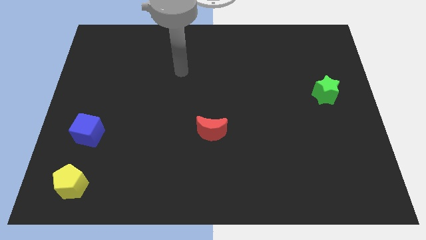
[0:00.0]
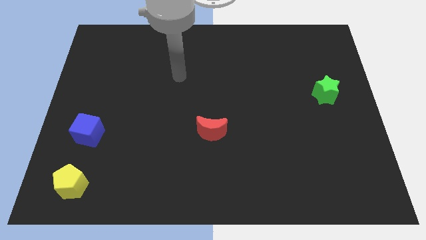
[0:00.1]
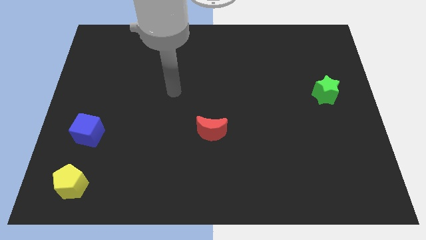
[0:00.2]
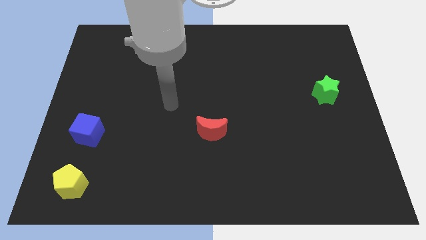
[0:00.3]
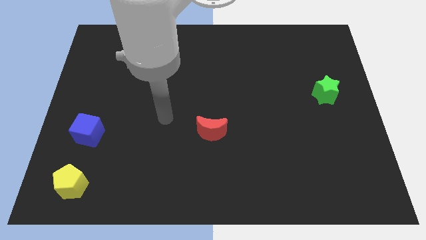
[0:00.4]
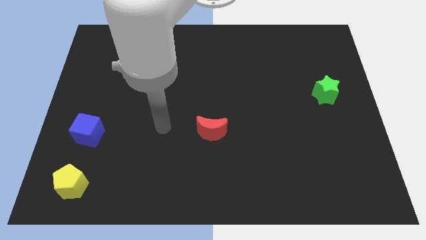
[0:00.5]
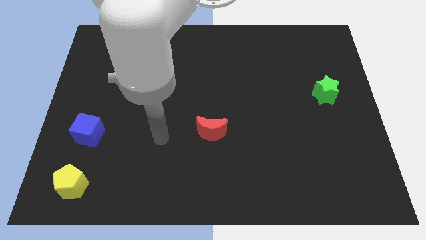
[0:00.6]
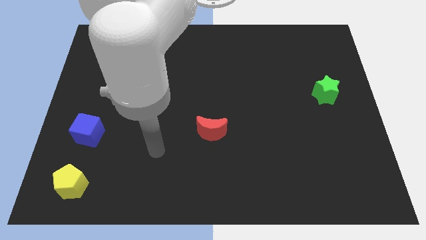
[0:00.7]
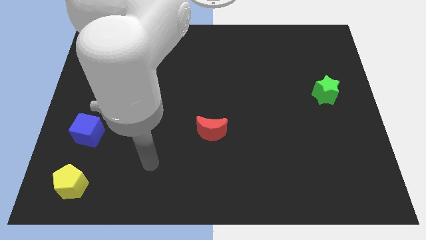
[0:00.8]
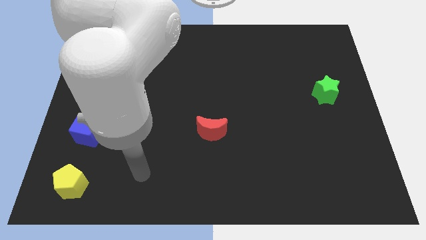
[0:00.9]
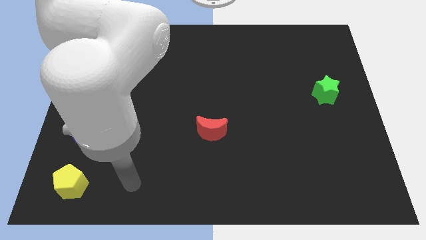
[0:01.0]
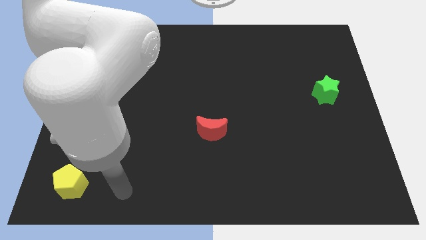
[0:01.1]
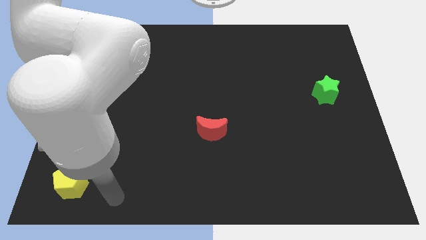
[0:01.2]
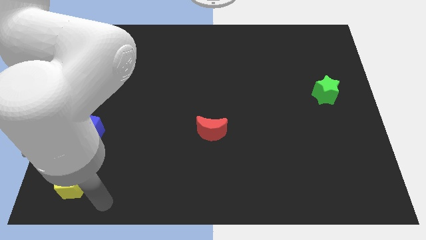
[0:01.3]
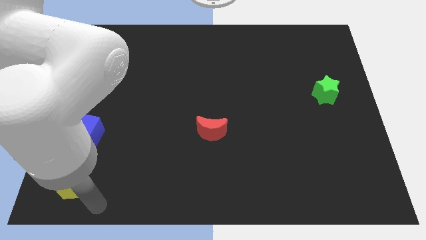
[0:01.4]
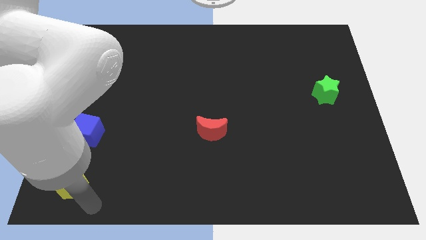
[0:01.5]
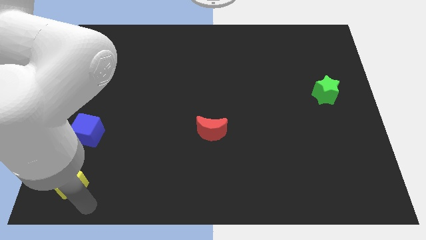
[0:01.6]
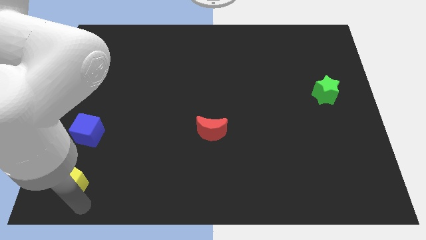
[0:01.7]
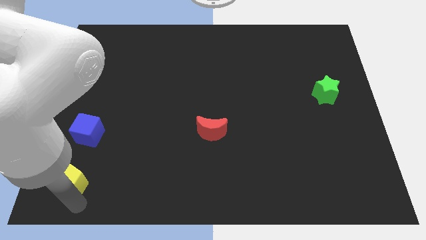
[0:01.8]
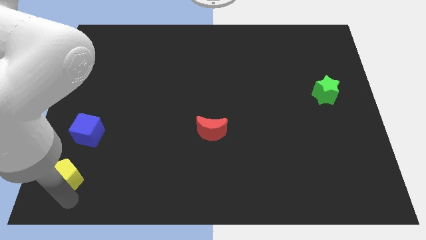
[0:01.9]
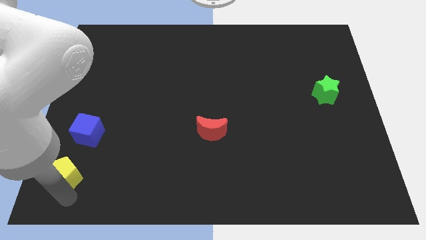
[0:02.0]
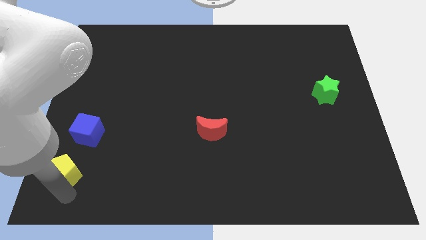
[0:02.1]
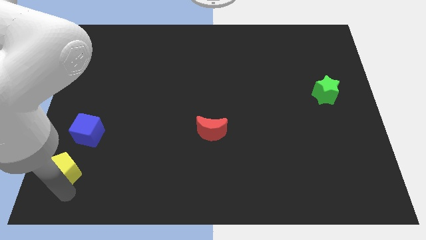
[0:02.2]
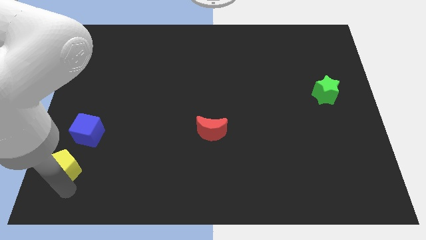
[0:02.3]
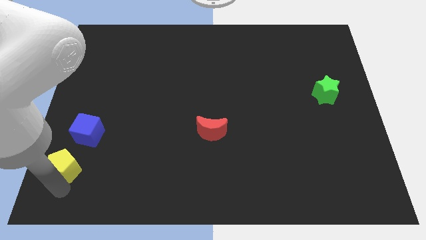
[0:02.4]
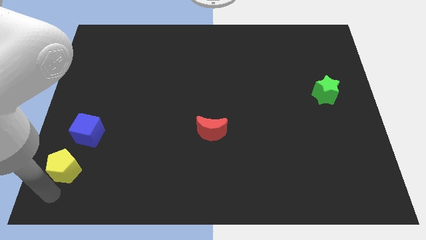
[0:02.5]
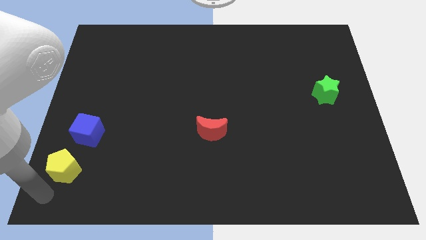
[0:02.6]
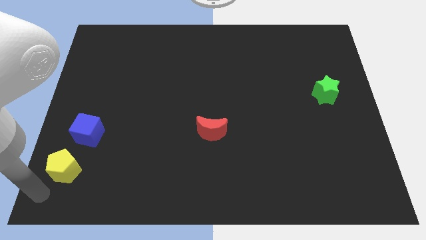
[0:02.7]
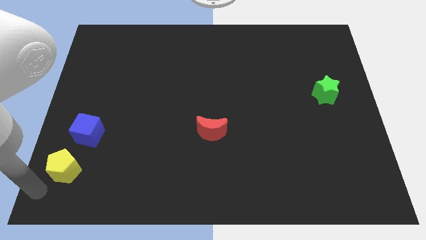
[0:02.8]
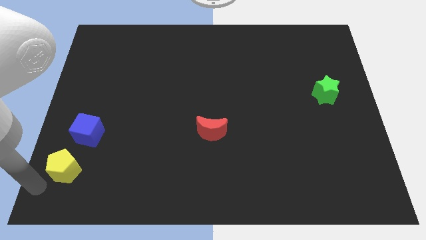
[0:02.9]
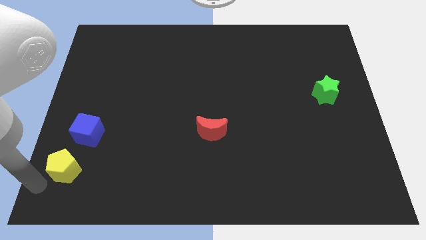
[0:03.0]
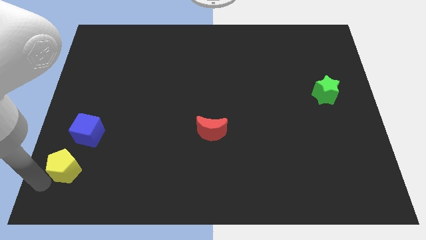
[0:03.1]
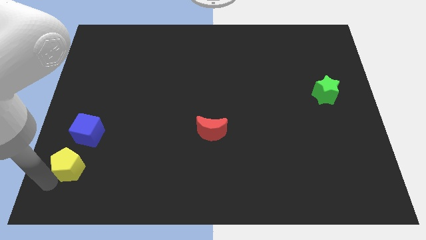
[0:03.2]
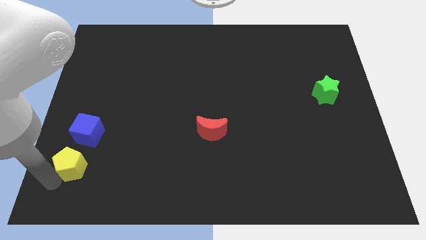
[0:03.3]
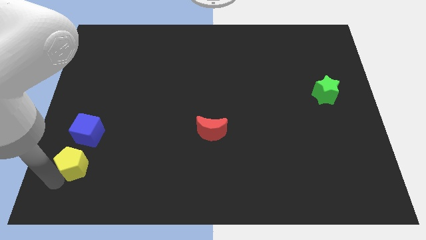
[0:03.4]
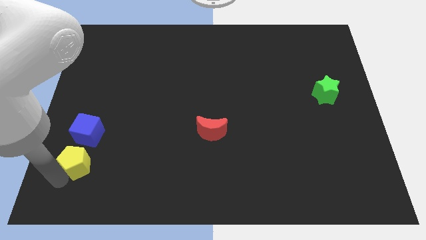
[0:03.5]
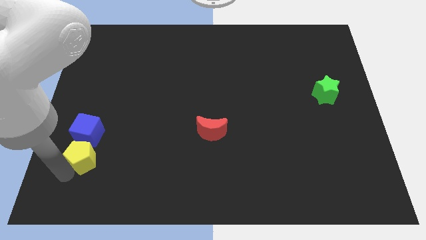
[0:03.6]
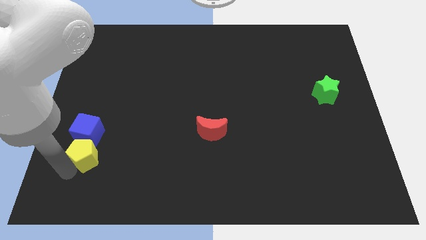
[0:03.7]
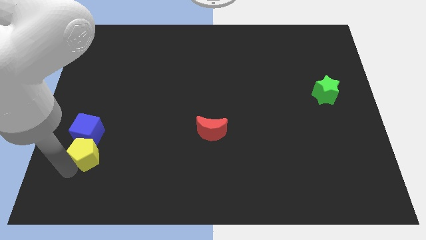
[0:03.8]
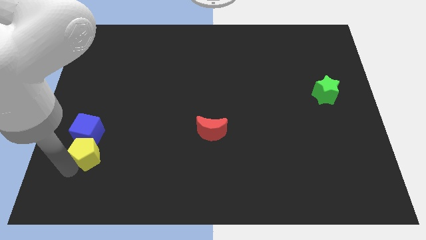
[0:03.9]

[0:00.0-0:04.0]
put the yellow block to the cube

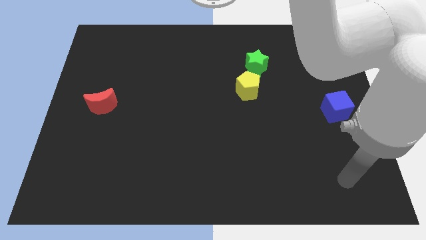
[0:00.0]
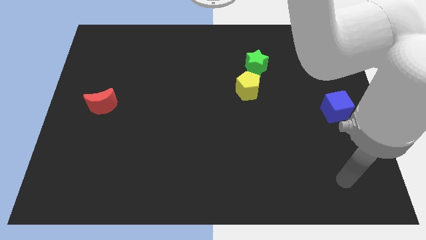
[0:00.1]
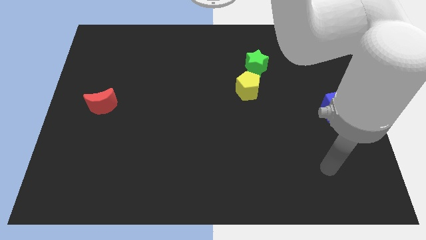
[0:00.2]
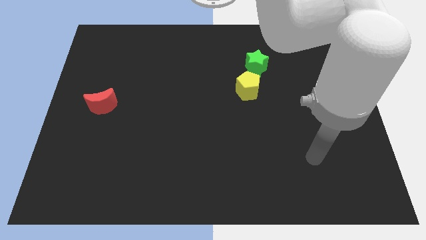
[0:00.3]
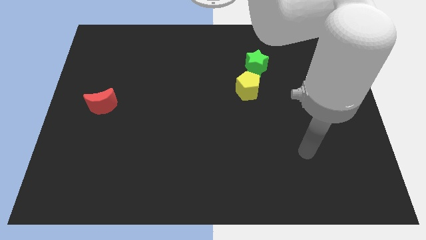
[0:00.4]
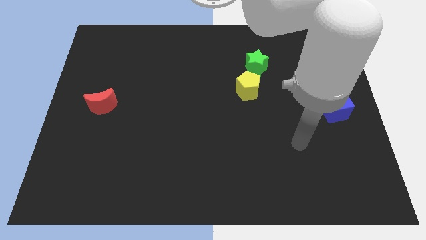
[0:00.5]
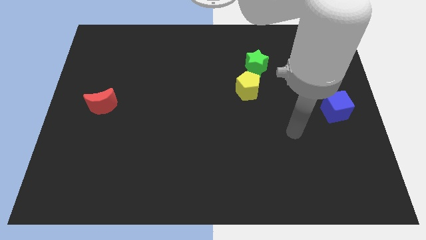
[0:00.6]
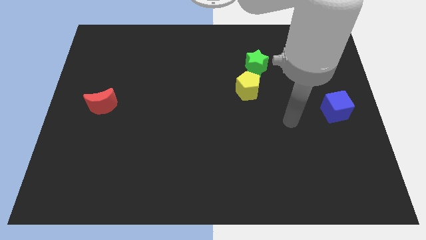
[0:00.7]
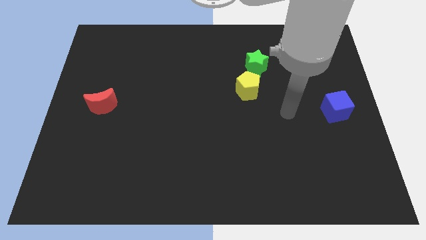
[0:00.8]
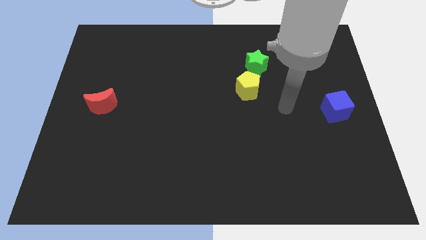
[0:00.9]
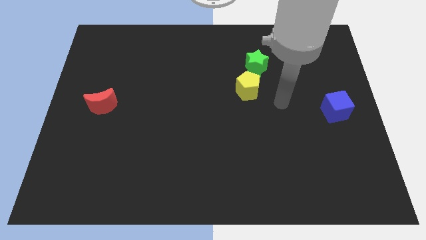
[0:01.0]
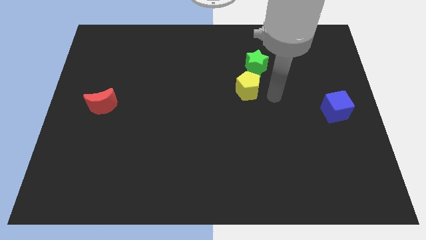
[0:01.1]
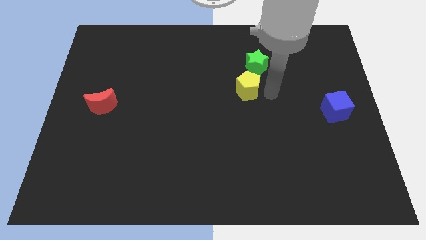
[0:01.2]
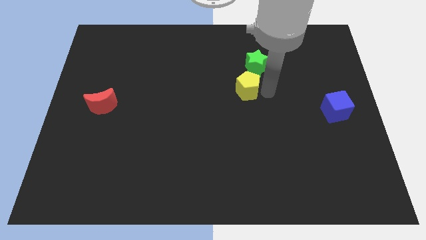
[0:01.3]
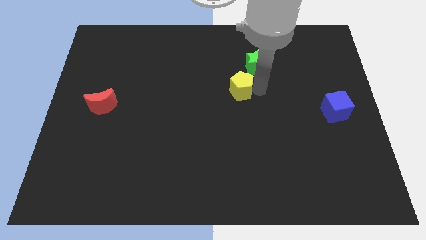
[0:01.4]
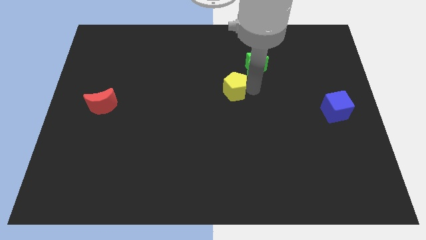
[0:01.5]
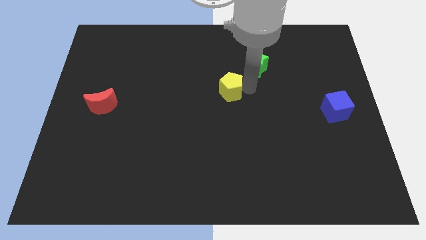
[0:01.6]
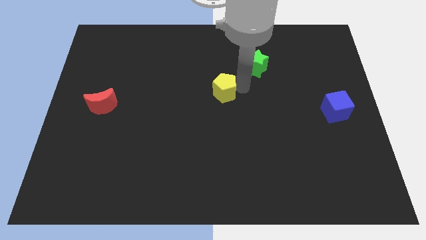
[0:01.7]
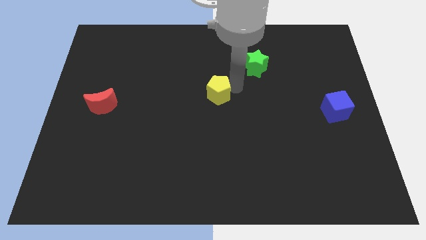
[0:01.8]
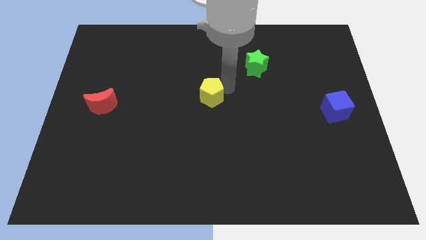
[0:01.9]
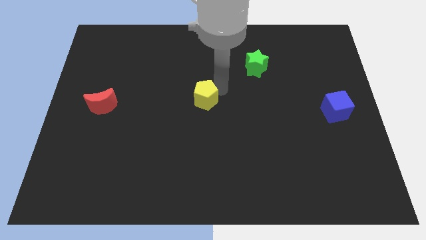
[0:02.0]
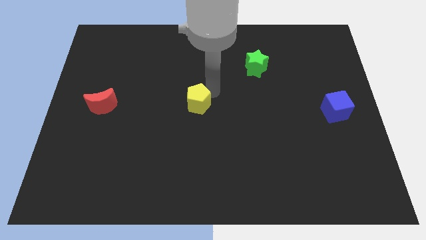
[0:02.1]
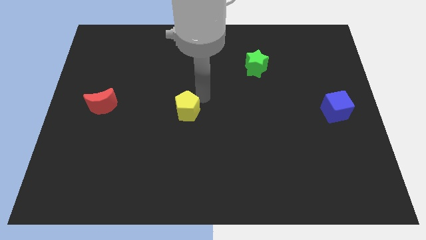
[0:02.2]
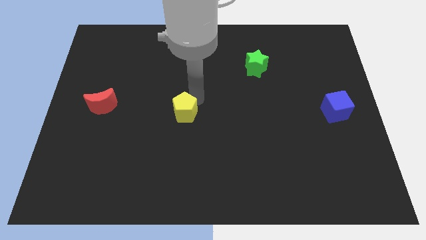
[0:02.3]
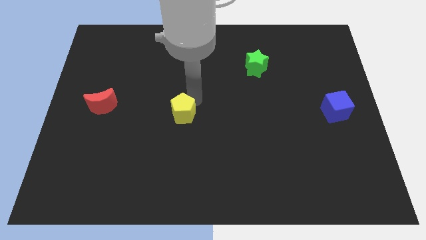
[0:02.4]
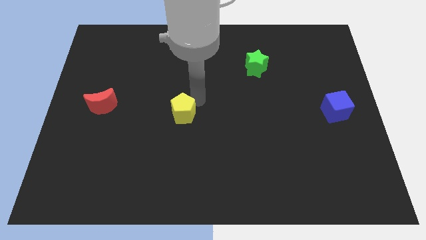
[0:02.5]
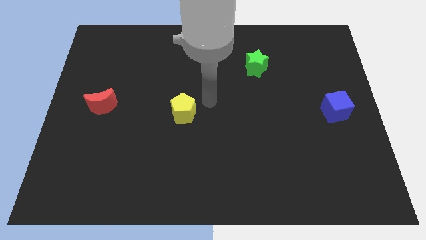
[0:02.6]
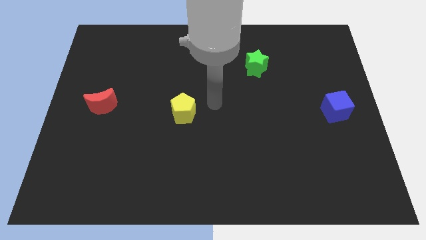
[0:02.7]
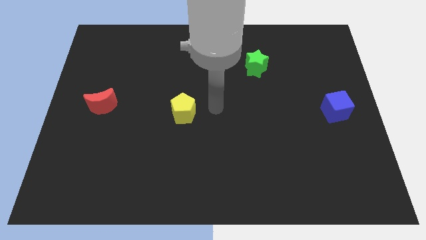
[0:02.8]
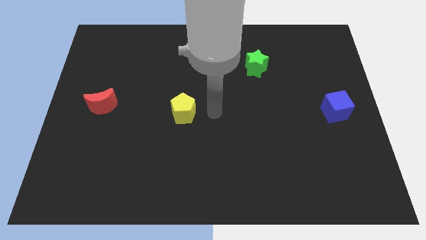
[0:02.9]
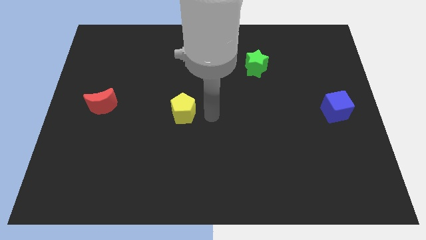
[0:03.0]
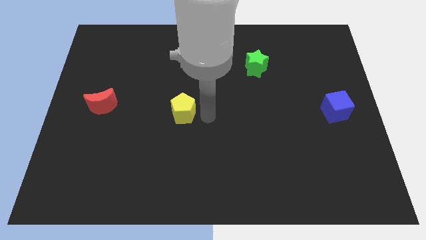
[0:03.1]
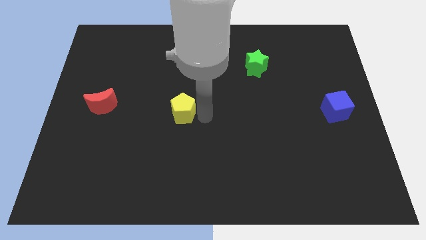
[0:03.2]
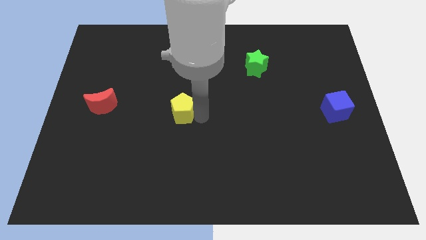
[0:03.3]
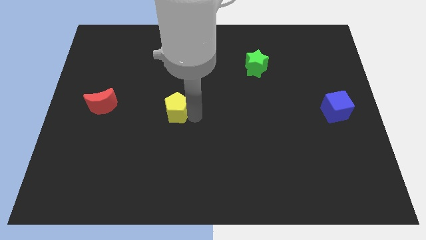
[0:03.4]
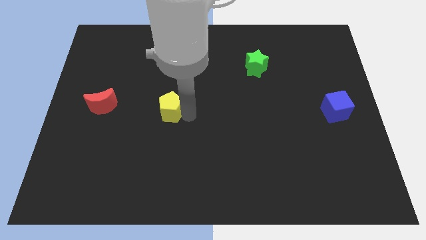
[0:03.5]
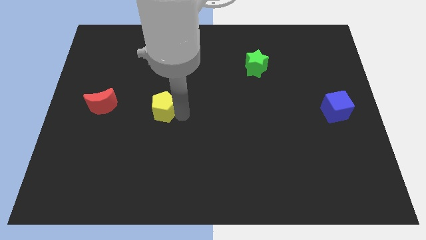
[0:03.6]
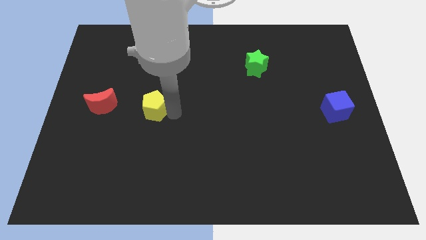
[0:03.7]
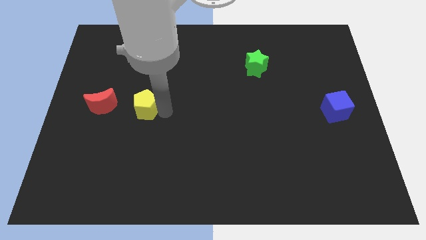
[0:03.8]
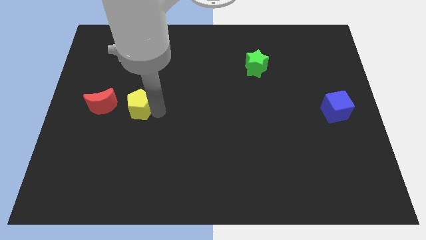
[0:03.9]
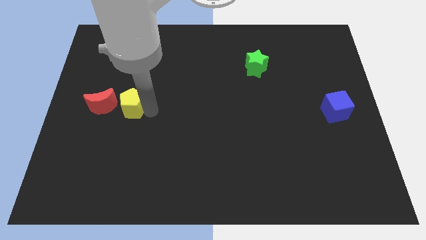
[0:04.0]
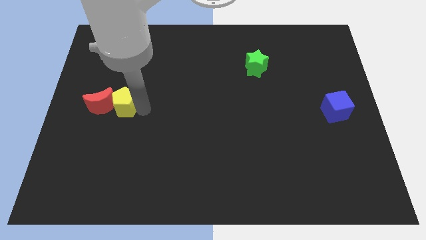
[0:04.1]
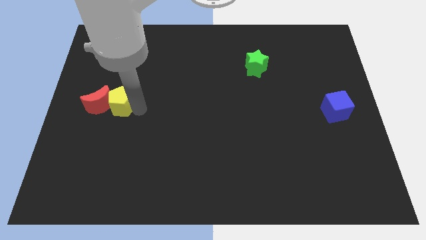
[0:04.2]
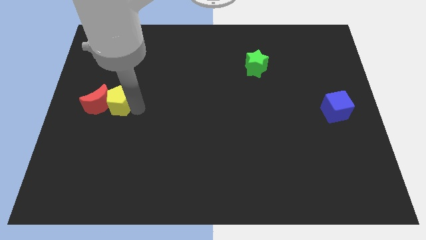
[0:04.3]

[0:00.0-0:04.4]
slide the yellow pentagon towards the red moon
